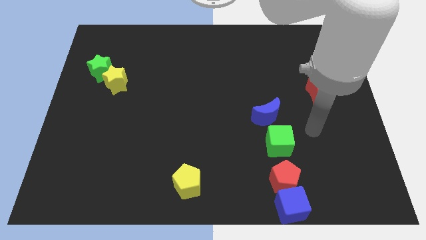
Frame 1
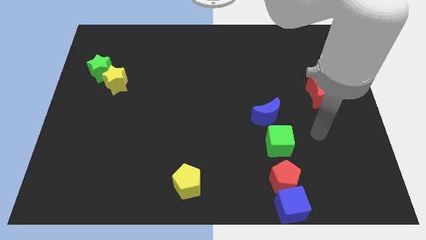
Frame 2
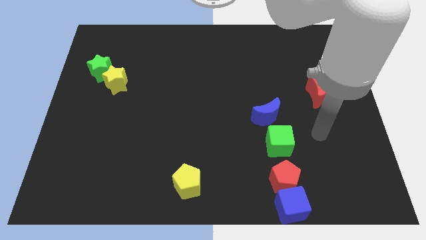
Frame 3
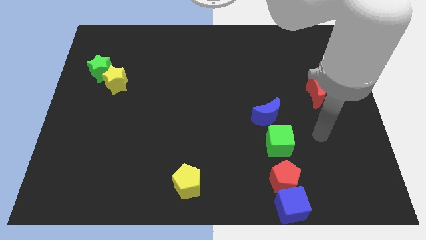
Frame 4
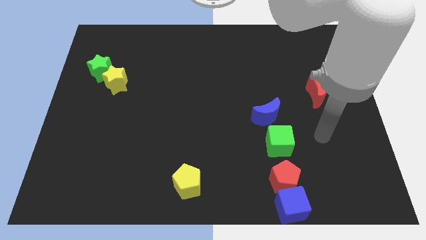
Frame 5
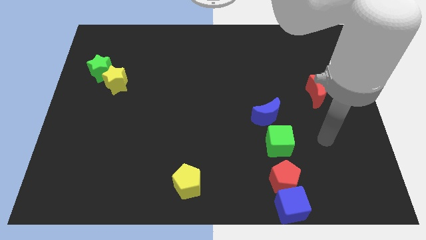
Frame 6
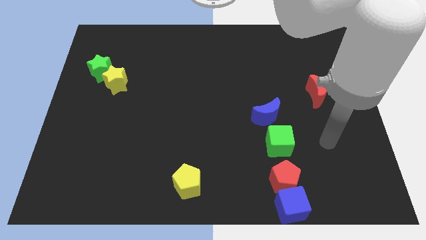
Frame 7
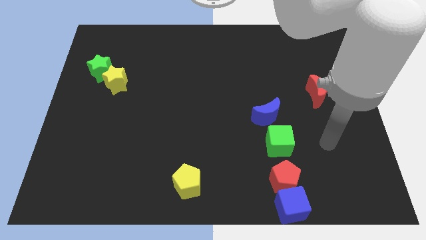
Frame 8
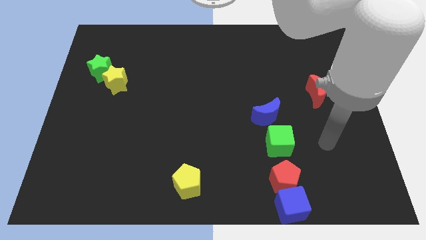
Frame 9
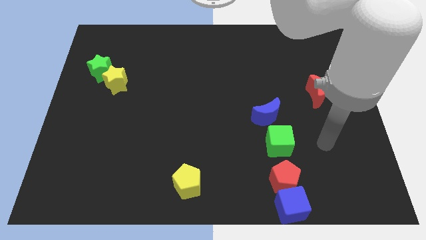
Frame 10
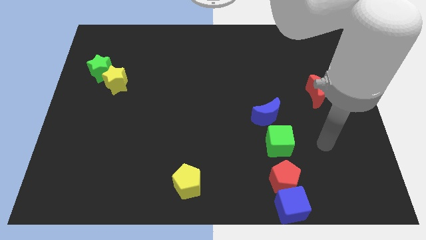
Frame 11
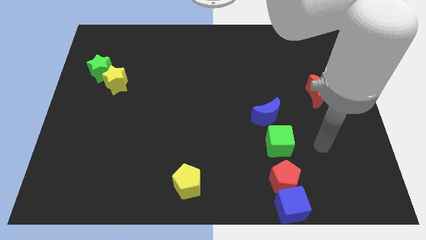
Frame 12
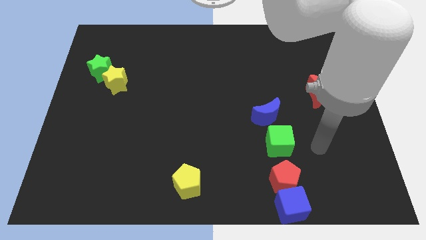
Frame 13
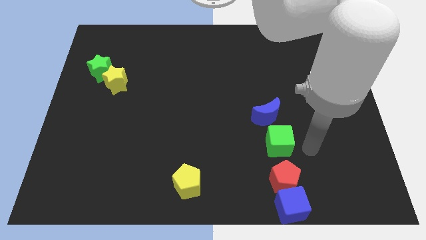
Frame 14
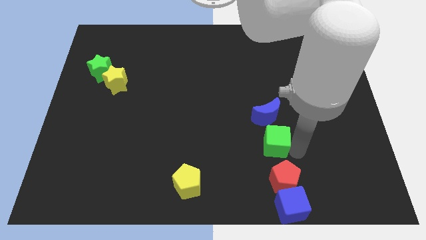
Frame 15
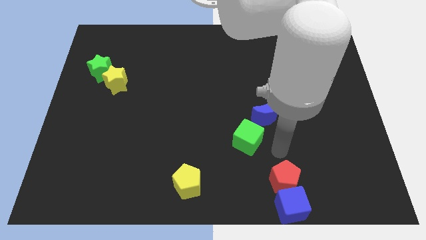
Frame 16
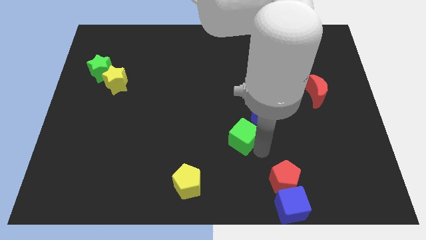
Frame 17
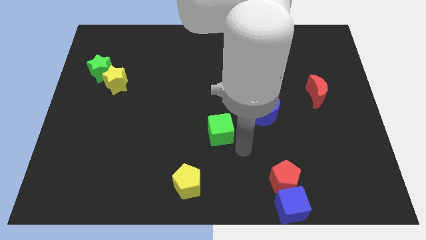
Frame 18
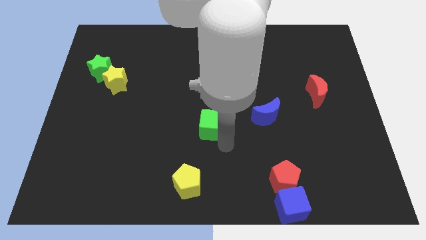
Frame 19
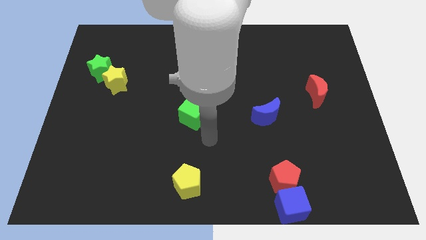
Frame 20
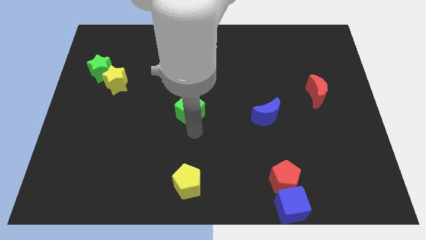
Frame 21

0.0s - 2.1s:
move green cube in to center of the board

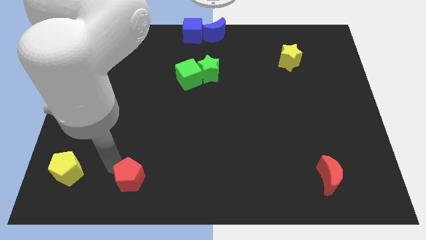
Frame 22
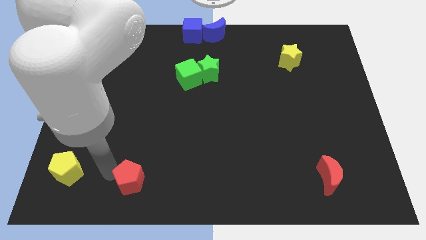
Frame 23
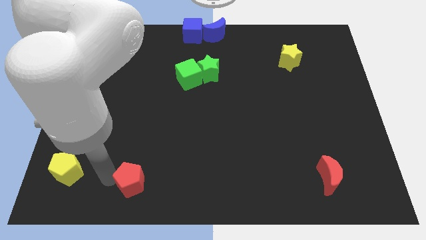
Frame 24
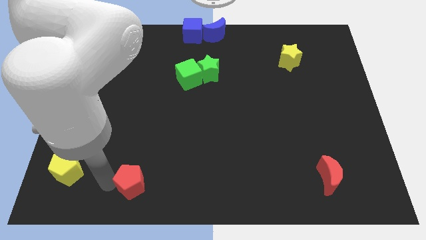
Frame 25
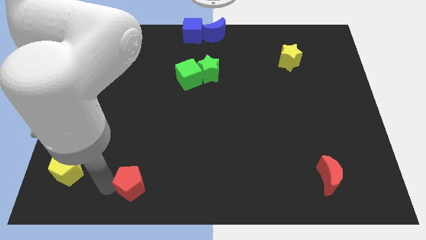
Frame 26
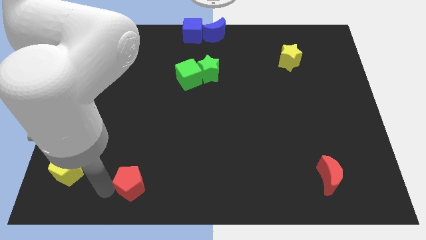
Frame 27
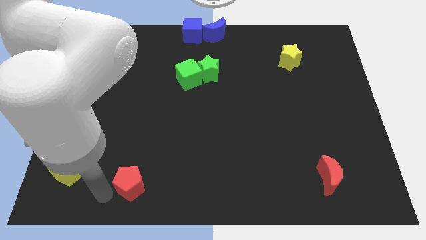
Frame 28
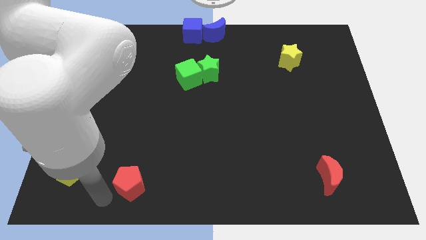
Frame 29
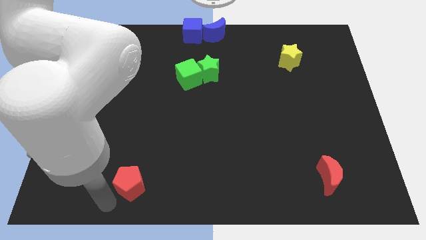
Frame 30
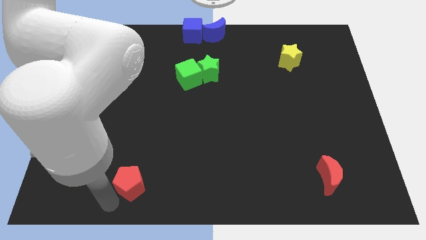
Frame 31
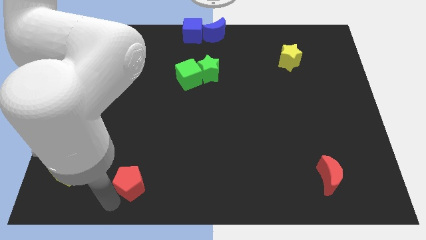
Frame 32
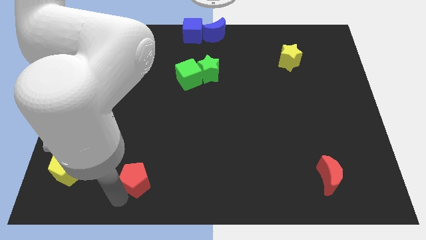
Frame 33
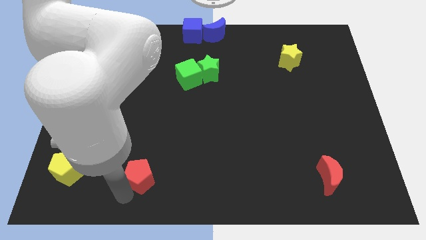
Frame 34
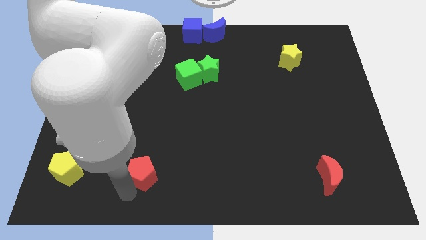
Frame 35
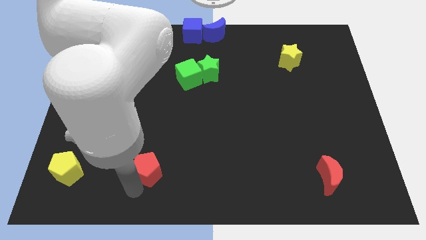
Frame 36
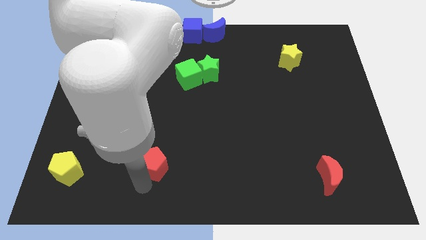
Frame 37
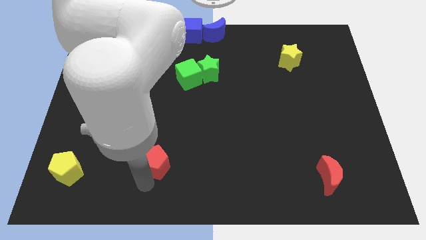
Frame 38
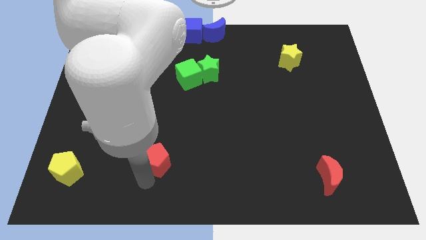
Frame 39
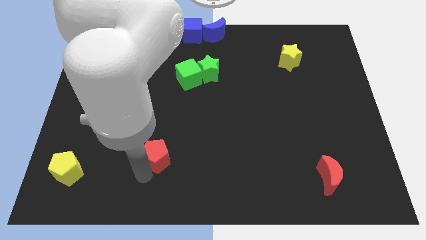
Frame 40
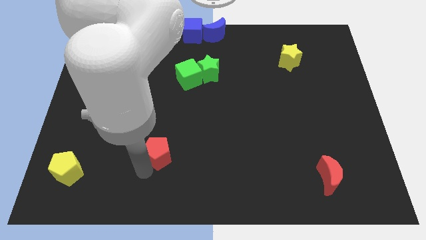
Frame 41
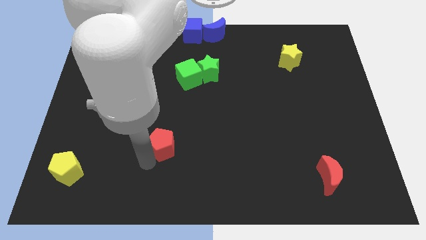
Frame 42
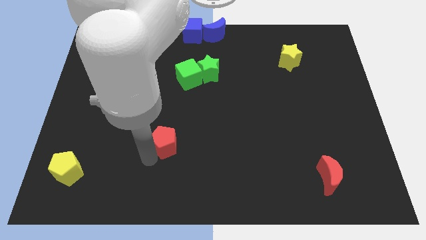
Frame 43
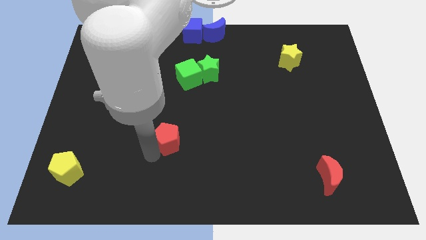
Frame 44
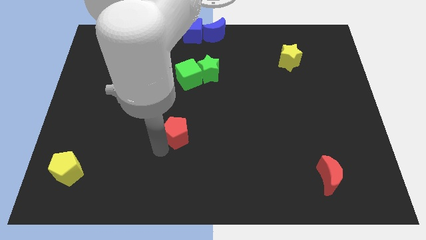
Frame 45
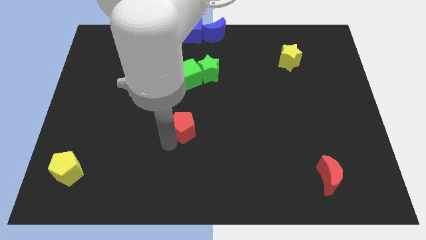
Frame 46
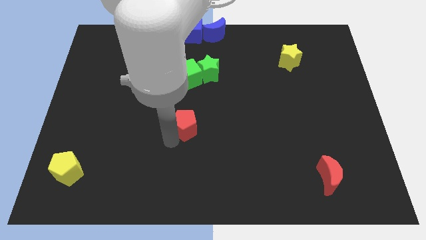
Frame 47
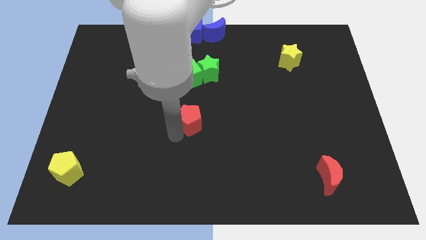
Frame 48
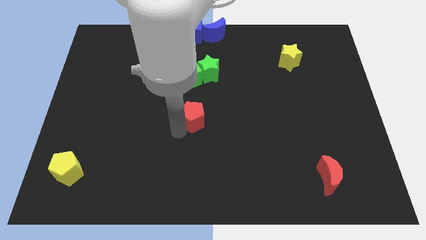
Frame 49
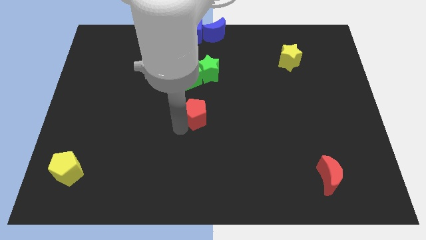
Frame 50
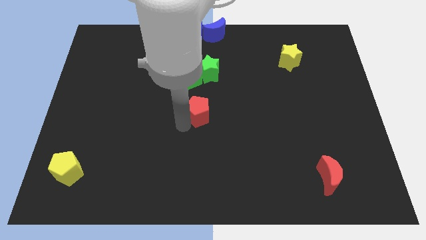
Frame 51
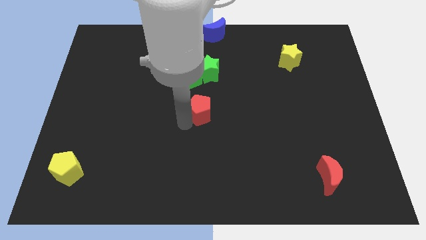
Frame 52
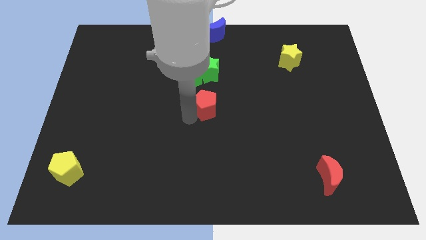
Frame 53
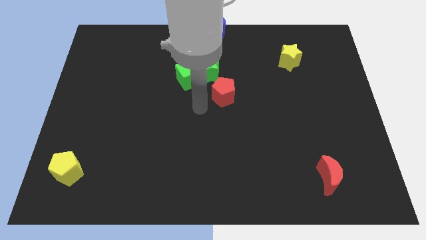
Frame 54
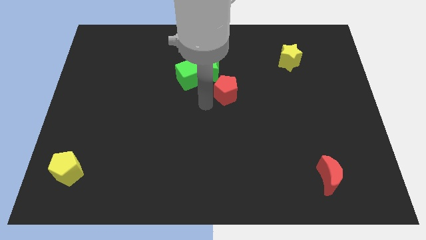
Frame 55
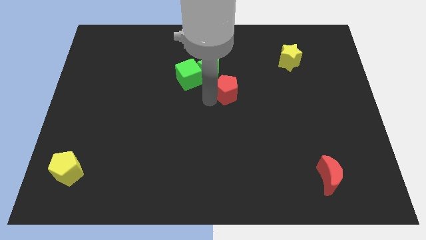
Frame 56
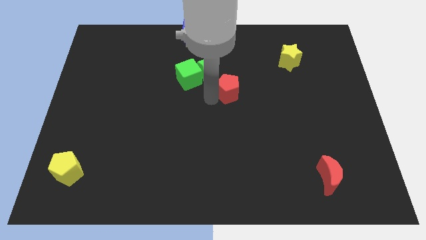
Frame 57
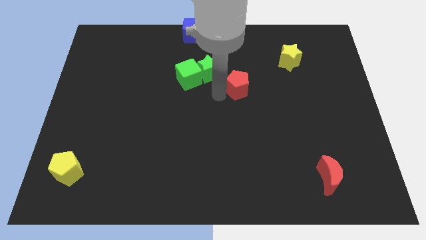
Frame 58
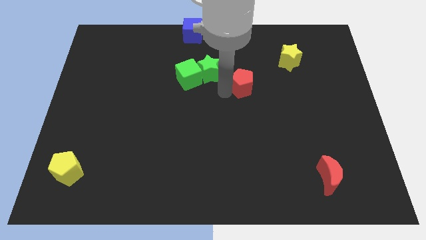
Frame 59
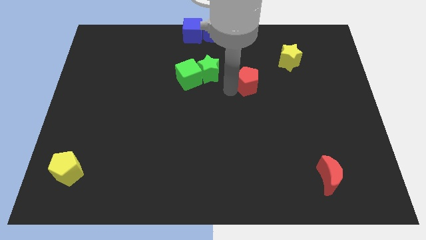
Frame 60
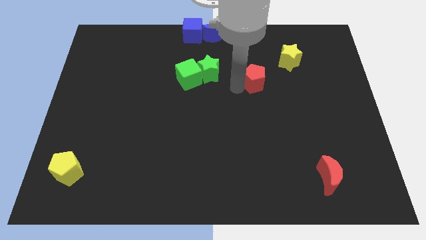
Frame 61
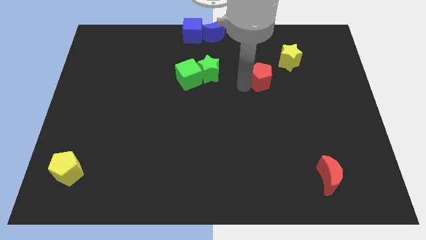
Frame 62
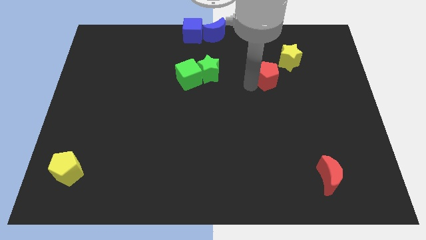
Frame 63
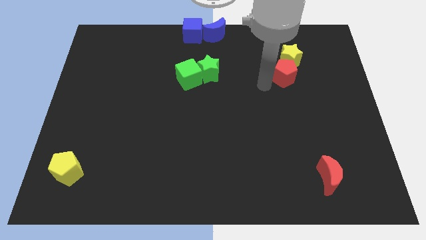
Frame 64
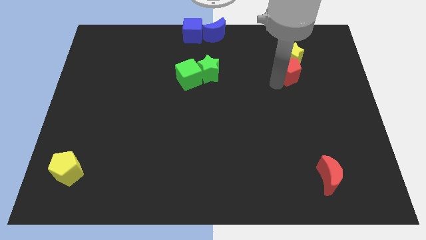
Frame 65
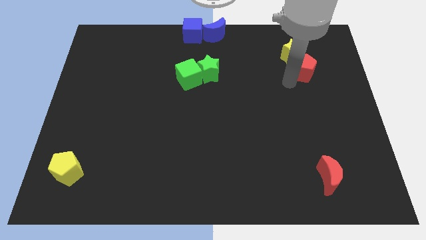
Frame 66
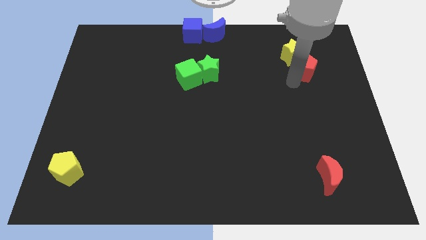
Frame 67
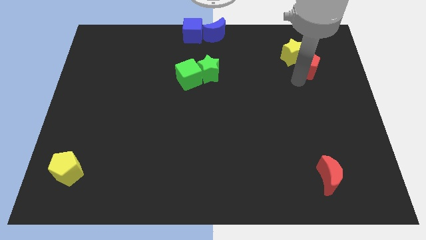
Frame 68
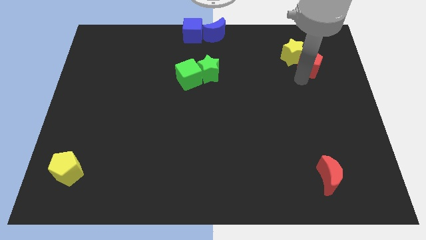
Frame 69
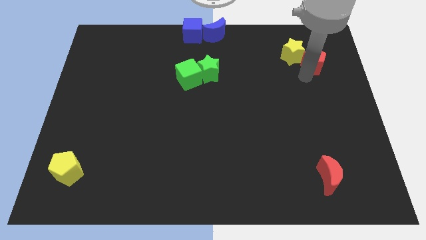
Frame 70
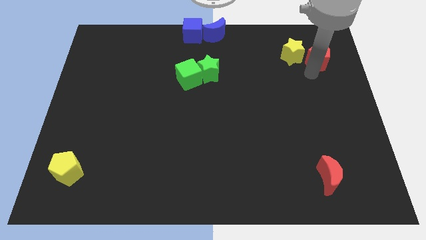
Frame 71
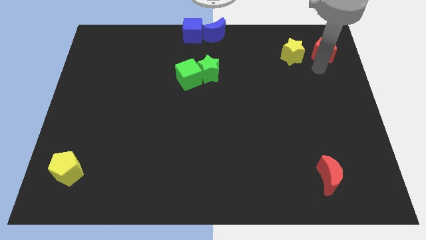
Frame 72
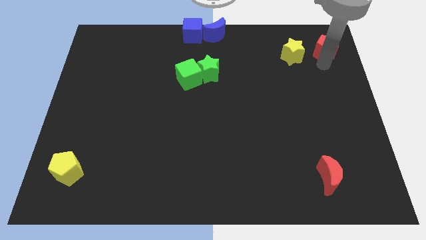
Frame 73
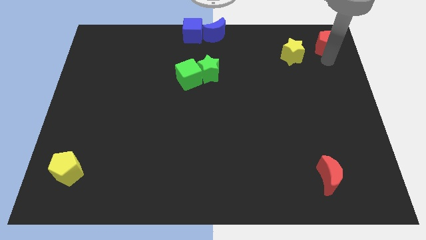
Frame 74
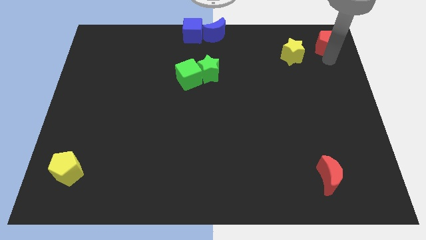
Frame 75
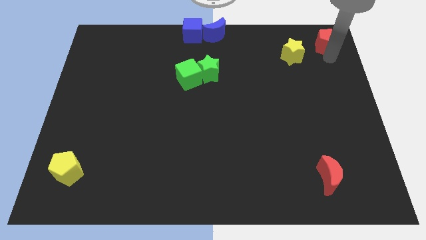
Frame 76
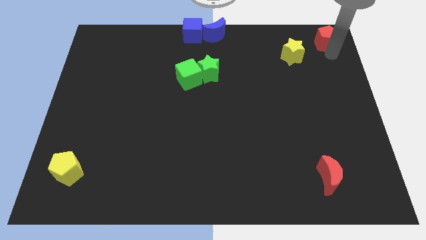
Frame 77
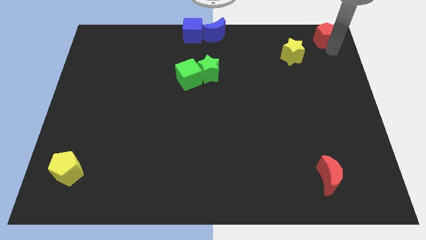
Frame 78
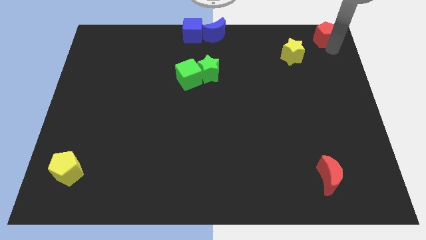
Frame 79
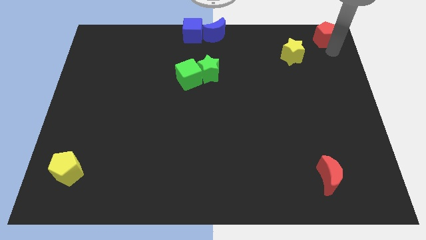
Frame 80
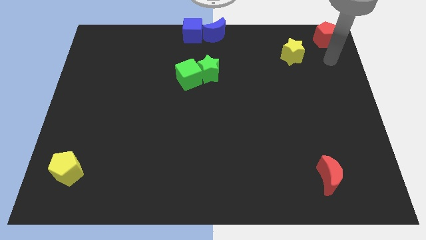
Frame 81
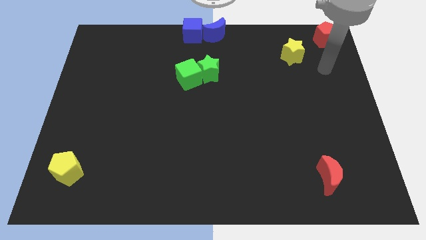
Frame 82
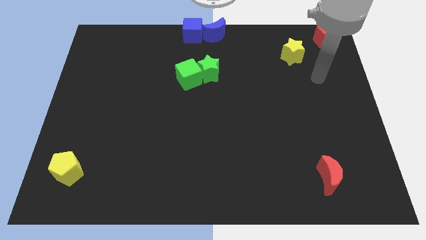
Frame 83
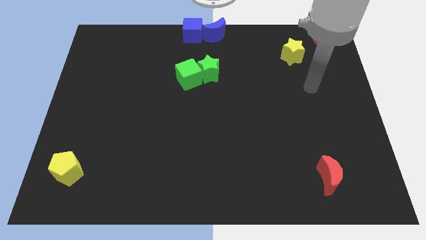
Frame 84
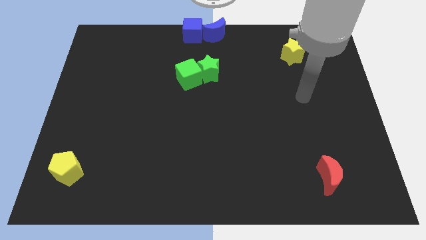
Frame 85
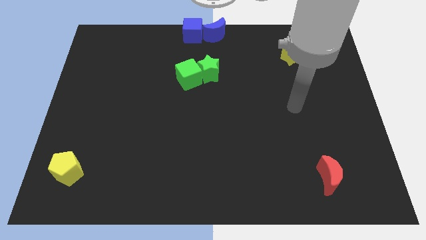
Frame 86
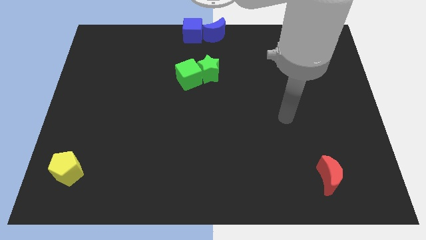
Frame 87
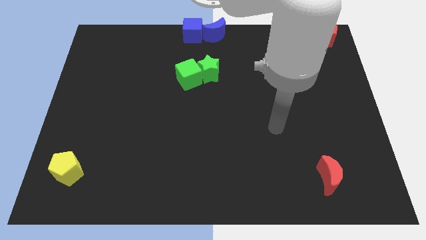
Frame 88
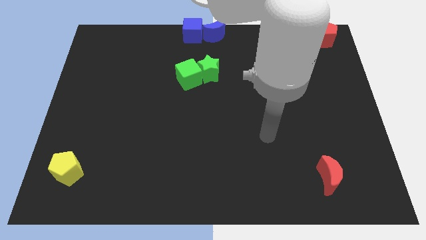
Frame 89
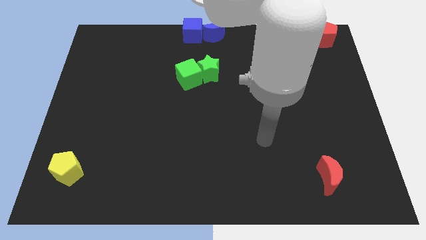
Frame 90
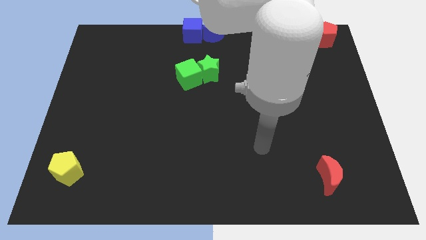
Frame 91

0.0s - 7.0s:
drag the red pentagon to the top right
